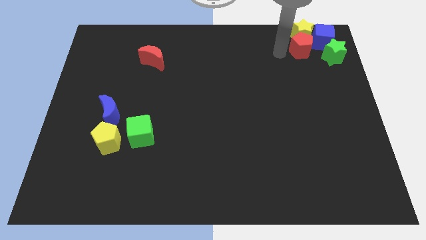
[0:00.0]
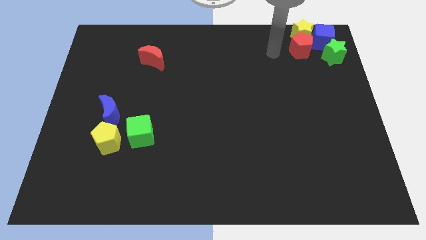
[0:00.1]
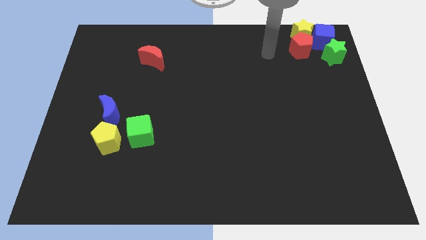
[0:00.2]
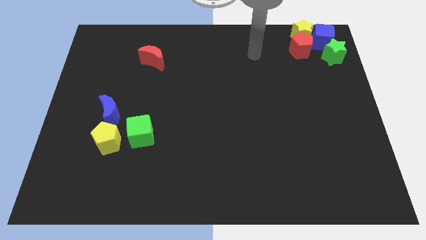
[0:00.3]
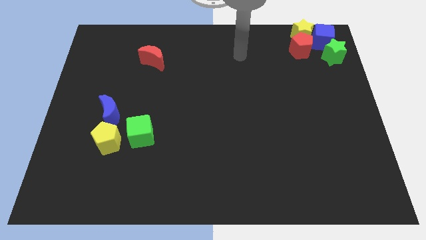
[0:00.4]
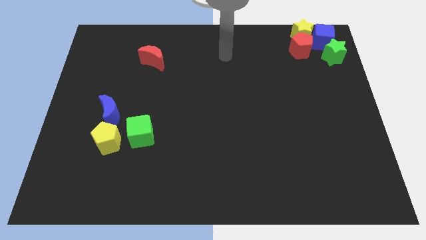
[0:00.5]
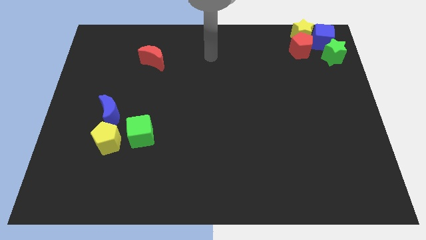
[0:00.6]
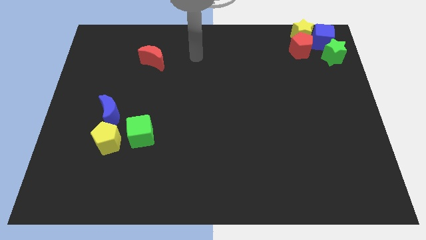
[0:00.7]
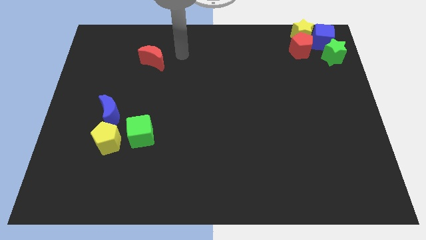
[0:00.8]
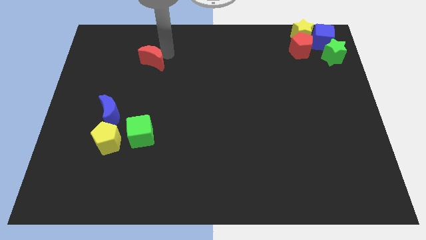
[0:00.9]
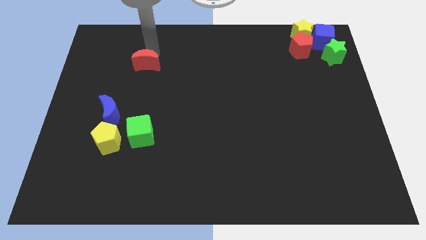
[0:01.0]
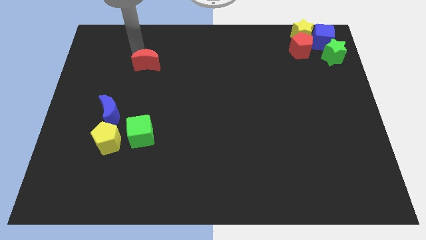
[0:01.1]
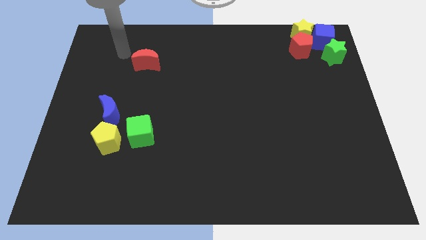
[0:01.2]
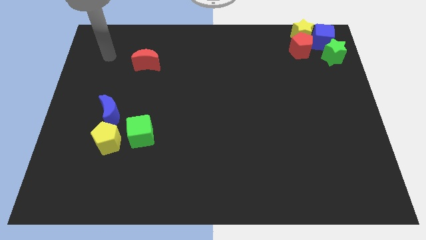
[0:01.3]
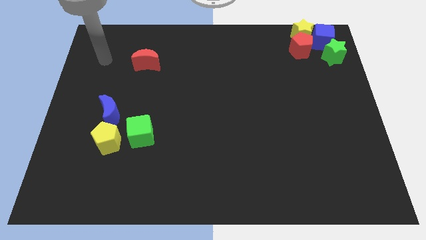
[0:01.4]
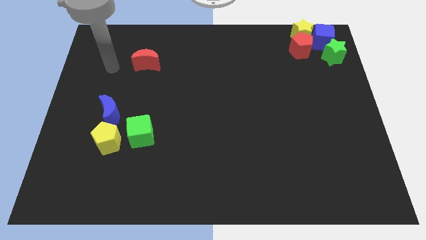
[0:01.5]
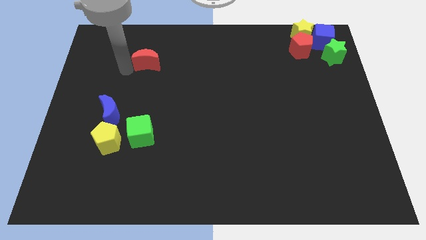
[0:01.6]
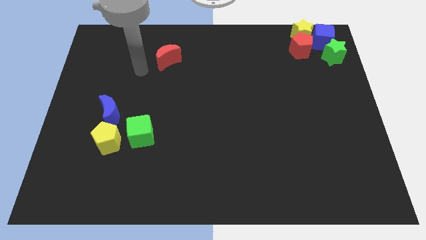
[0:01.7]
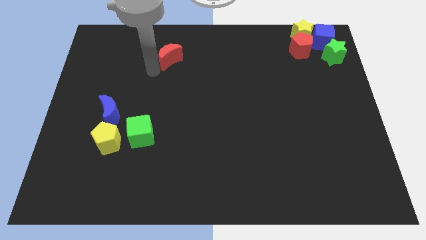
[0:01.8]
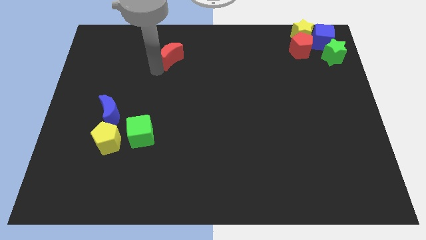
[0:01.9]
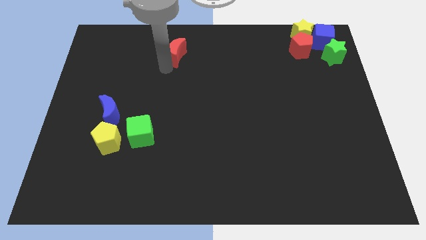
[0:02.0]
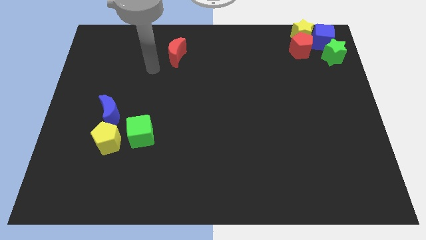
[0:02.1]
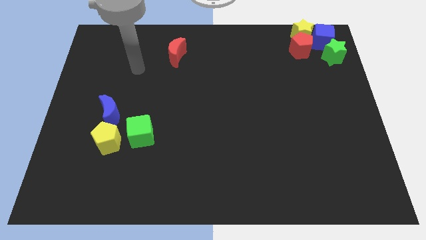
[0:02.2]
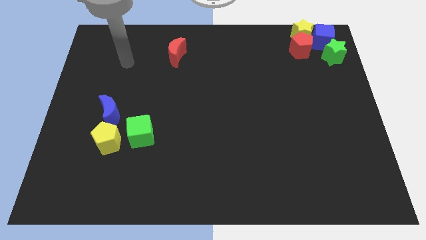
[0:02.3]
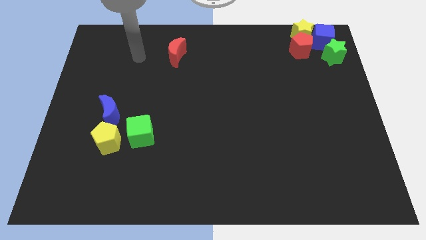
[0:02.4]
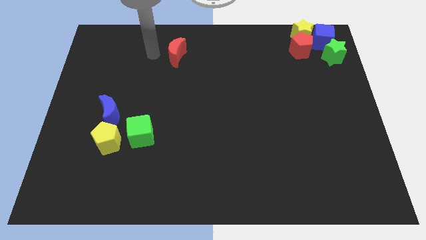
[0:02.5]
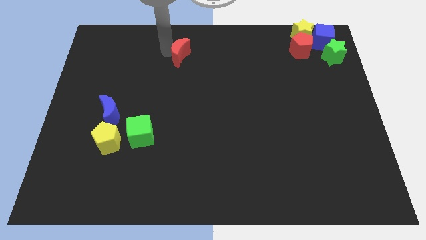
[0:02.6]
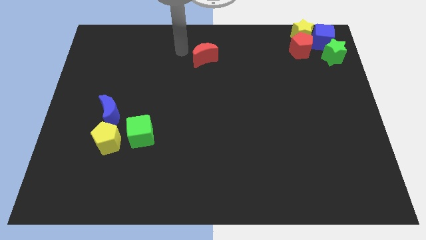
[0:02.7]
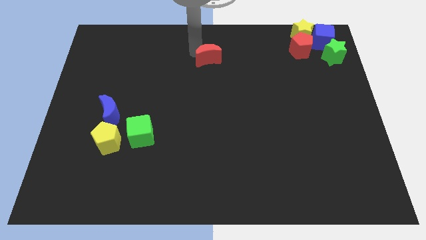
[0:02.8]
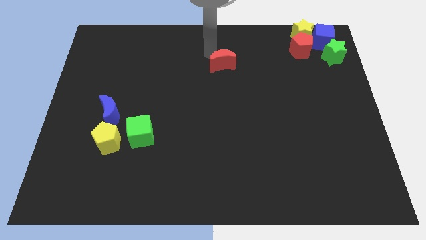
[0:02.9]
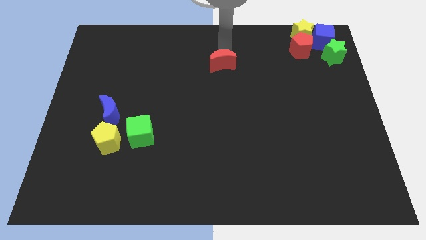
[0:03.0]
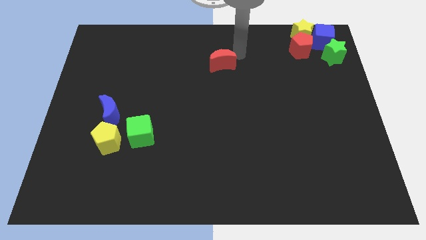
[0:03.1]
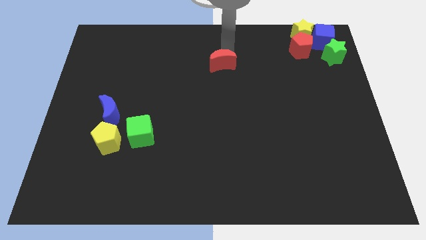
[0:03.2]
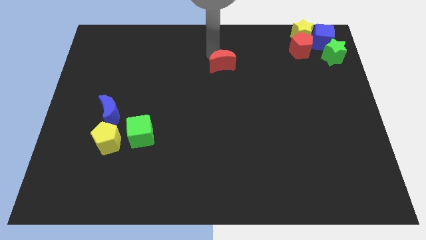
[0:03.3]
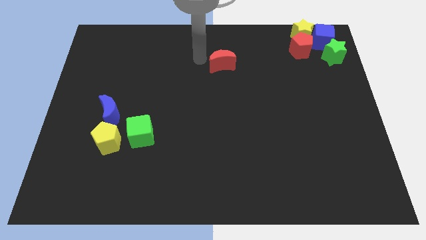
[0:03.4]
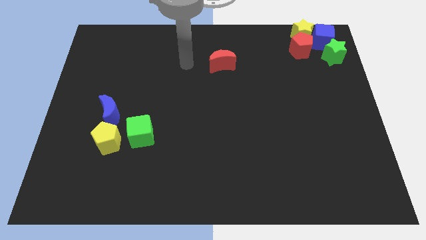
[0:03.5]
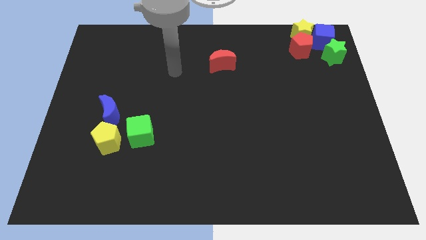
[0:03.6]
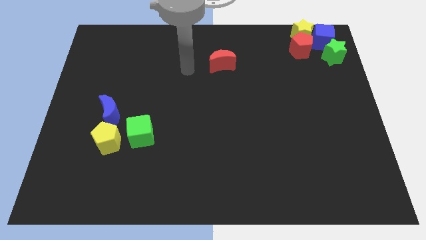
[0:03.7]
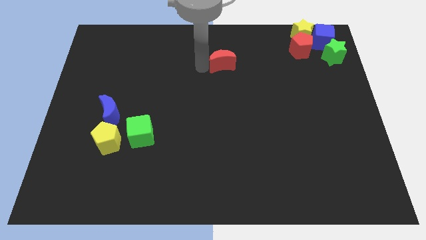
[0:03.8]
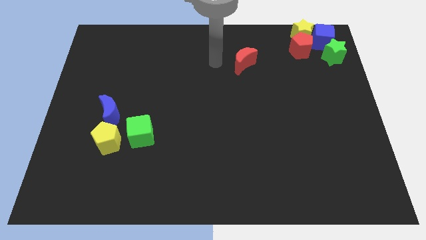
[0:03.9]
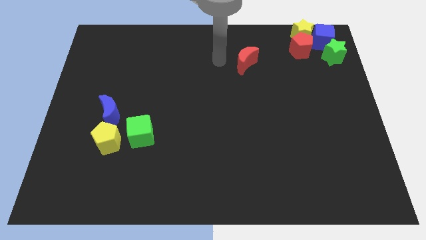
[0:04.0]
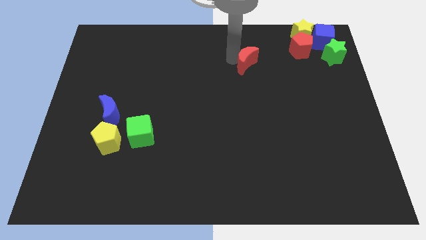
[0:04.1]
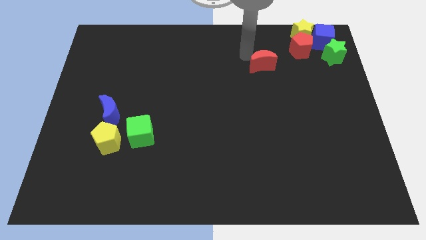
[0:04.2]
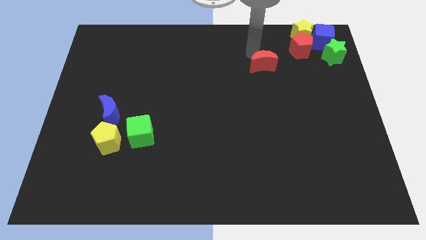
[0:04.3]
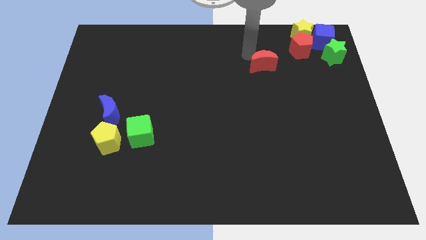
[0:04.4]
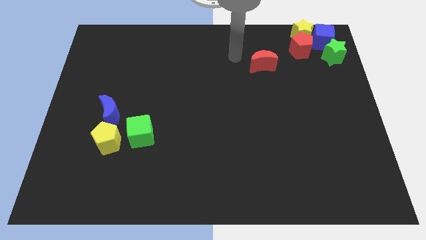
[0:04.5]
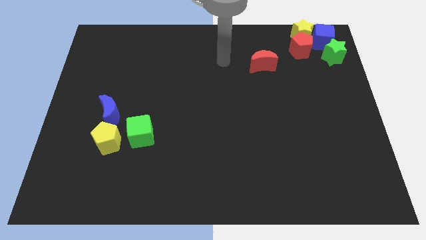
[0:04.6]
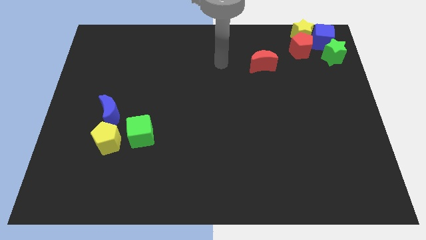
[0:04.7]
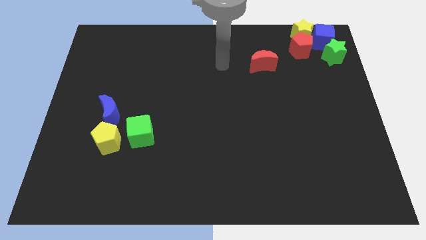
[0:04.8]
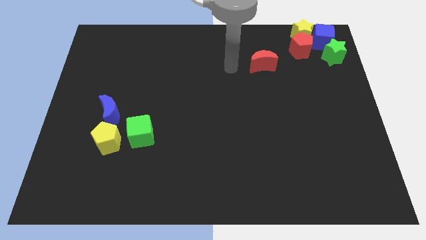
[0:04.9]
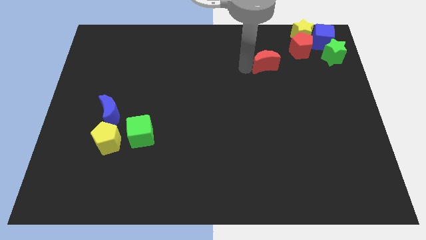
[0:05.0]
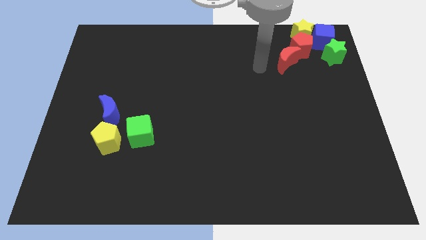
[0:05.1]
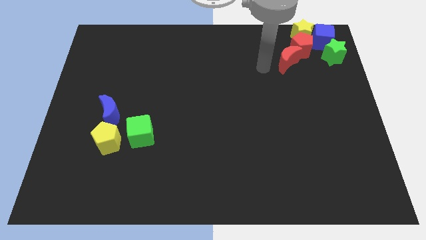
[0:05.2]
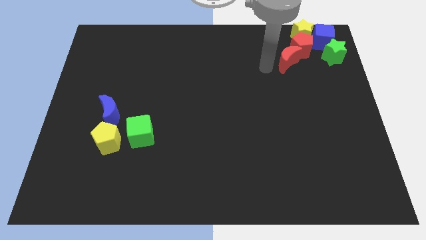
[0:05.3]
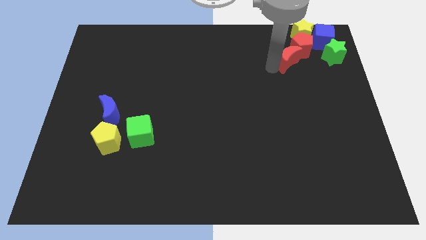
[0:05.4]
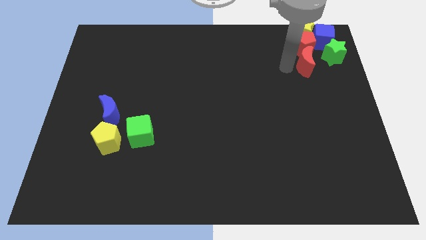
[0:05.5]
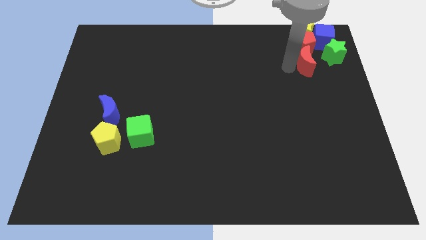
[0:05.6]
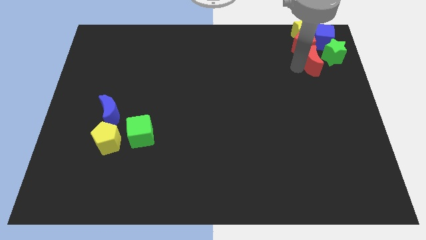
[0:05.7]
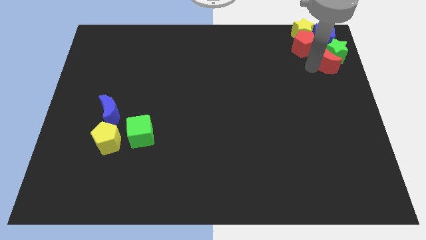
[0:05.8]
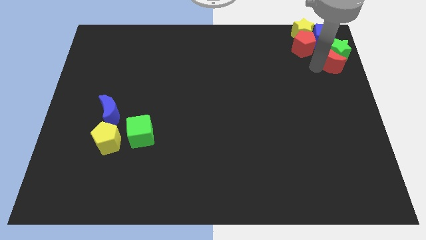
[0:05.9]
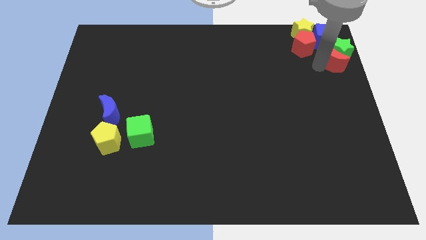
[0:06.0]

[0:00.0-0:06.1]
move the red moon towards the top of the green star

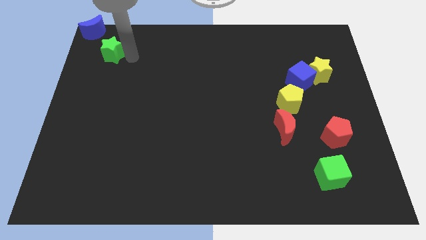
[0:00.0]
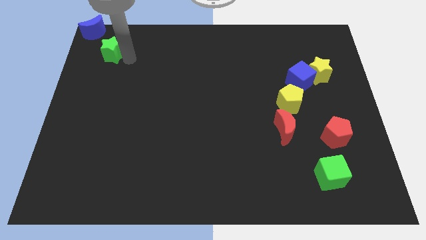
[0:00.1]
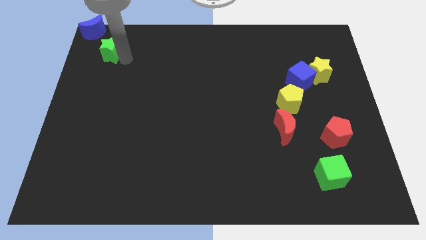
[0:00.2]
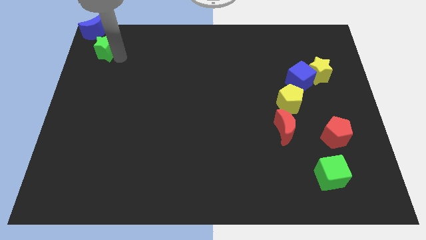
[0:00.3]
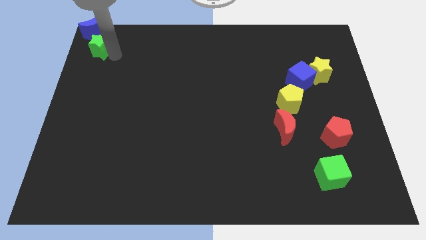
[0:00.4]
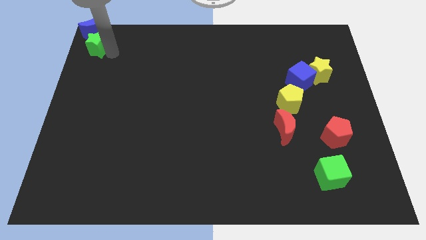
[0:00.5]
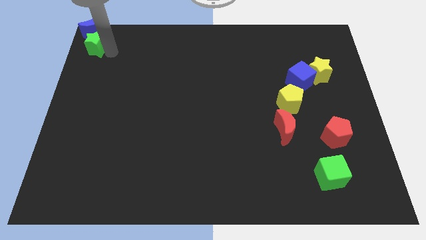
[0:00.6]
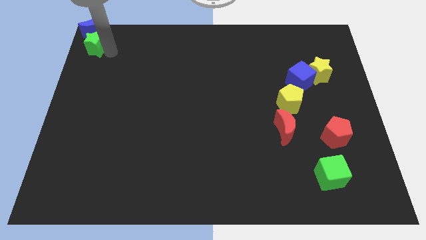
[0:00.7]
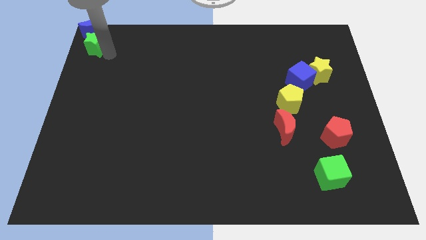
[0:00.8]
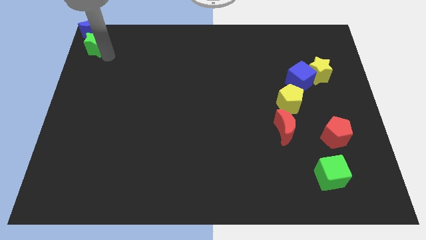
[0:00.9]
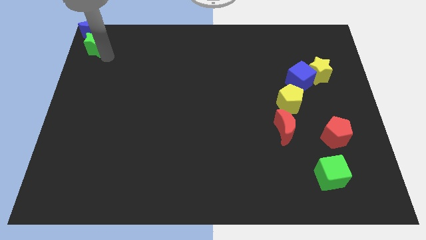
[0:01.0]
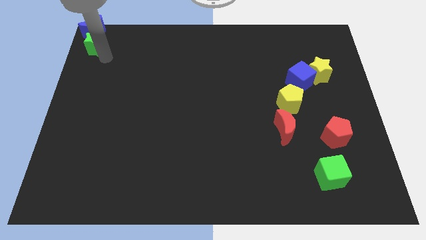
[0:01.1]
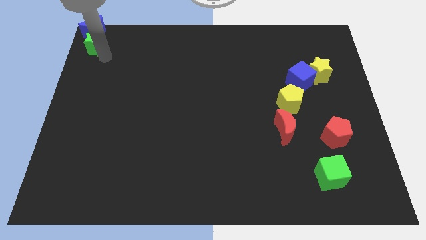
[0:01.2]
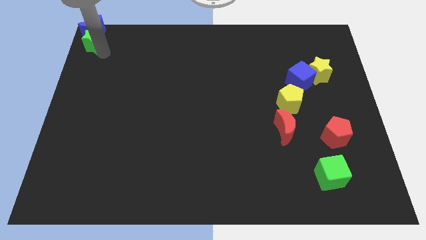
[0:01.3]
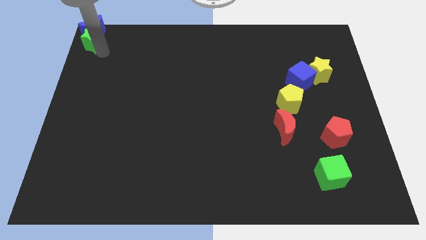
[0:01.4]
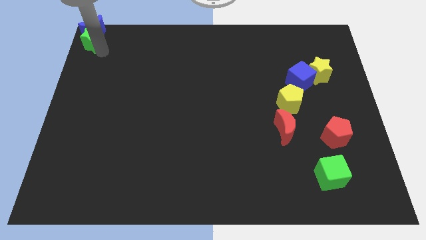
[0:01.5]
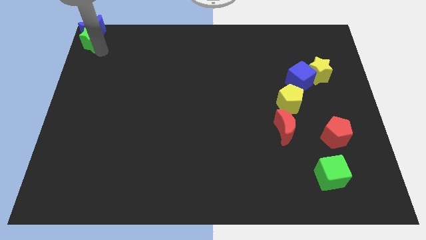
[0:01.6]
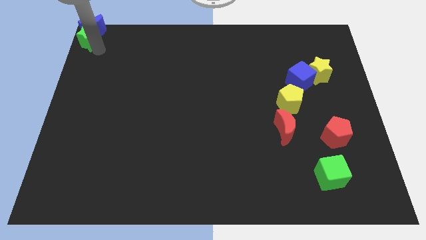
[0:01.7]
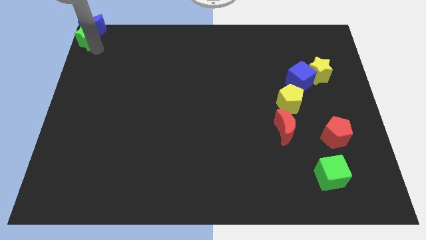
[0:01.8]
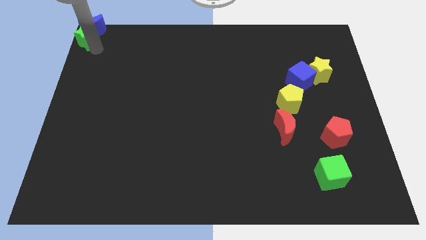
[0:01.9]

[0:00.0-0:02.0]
move the green star into the blue crescent

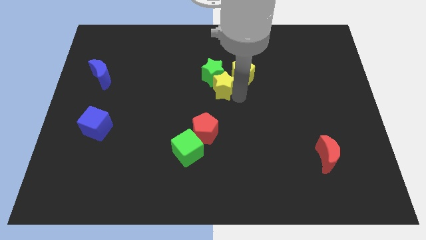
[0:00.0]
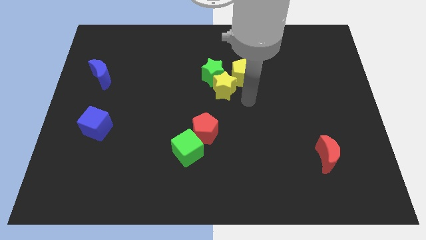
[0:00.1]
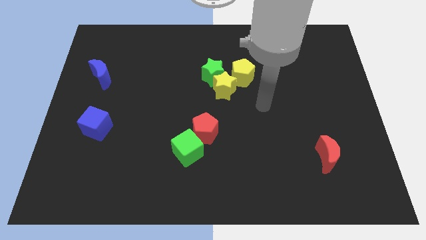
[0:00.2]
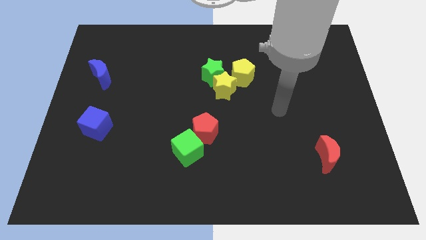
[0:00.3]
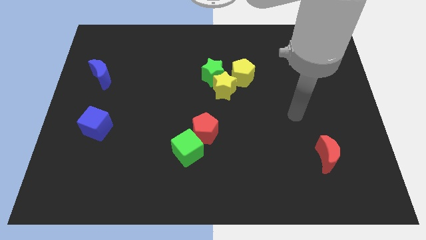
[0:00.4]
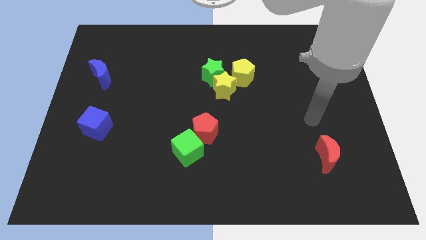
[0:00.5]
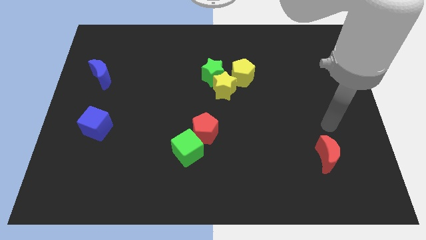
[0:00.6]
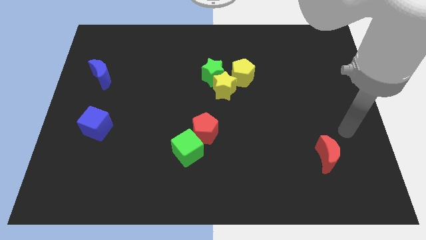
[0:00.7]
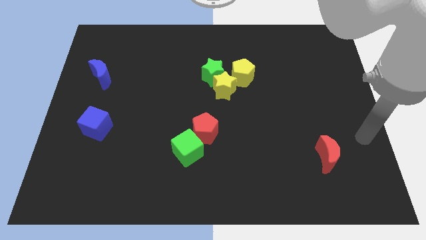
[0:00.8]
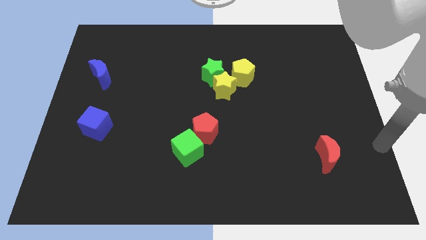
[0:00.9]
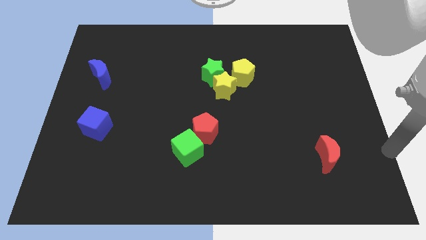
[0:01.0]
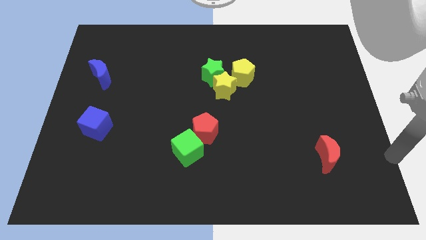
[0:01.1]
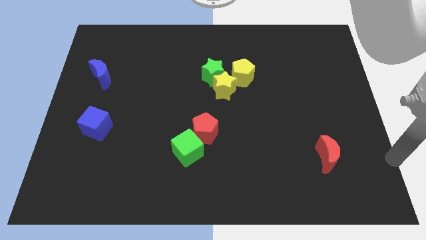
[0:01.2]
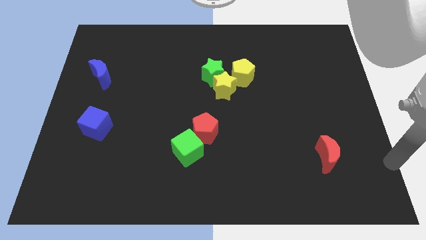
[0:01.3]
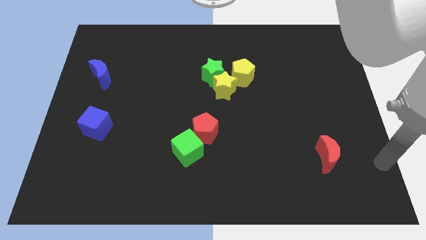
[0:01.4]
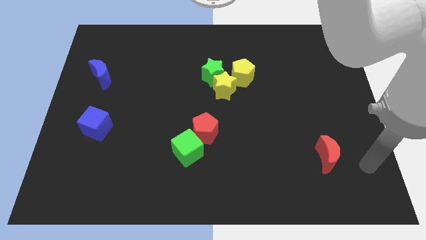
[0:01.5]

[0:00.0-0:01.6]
move your arm towards the right side of the board
